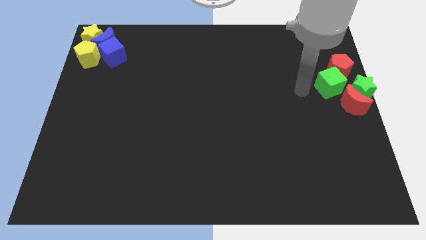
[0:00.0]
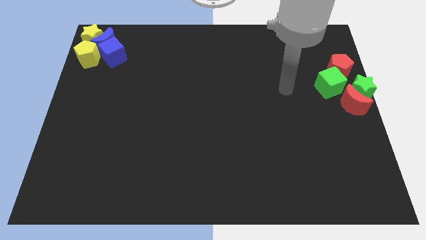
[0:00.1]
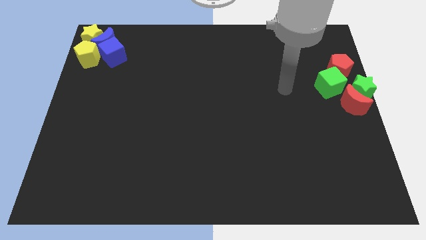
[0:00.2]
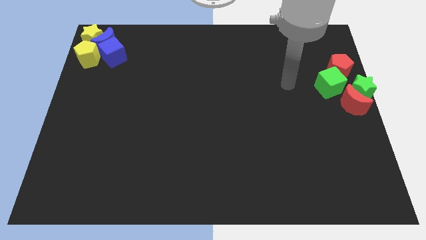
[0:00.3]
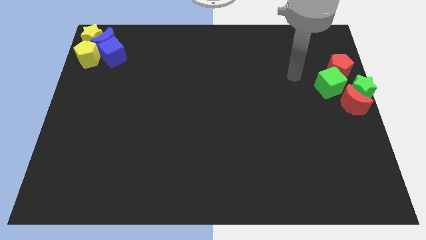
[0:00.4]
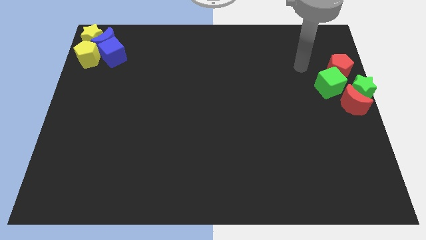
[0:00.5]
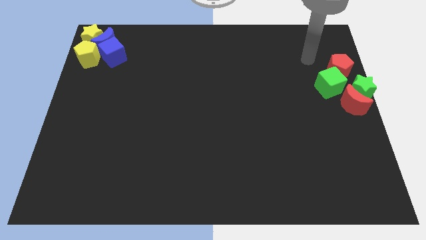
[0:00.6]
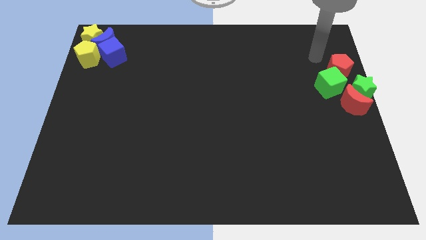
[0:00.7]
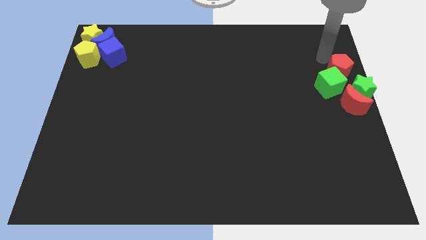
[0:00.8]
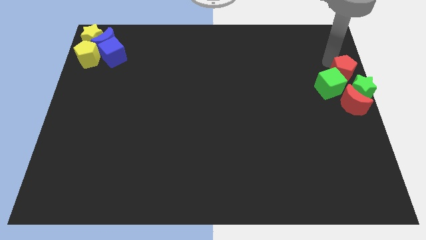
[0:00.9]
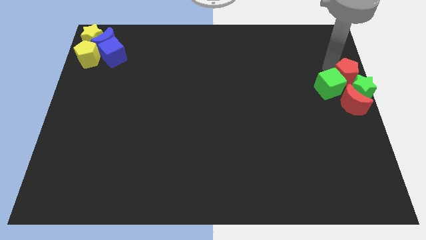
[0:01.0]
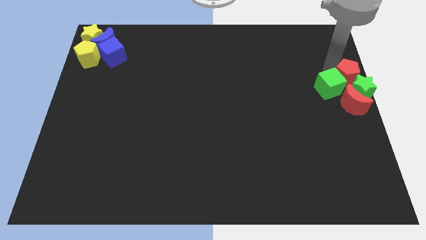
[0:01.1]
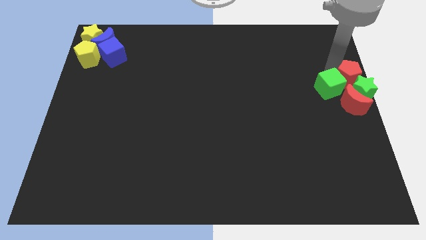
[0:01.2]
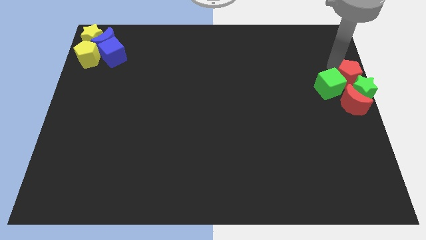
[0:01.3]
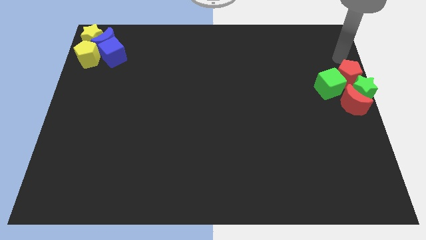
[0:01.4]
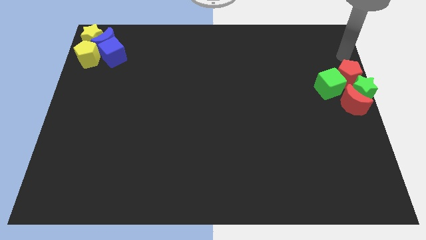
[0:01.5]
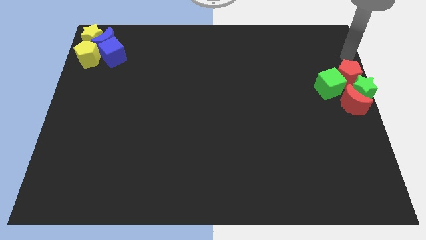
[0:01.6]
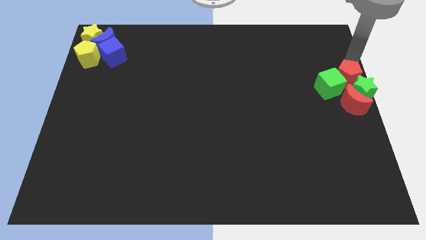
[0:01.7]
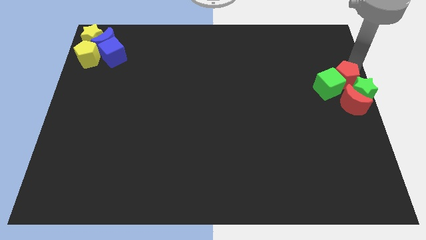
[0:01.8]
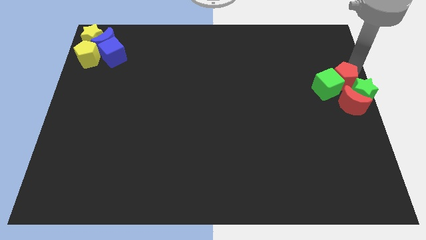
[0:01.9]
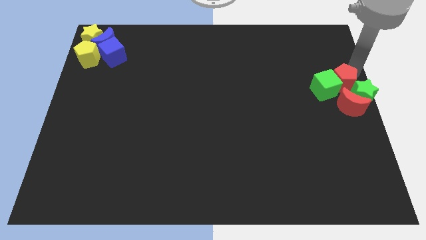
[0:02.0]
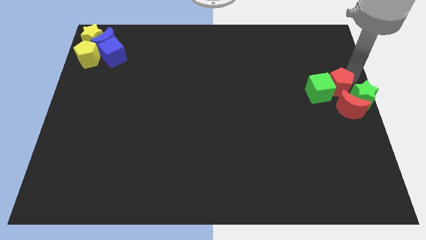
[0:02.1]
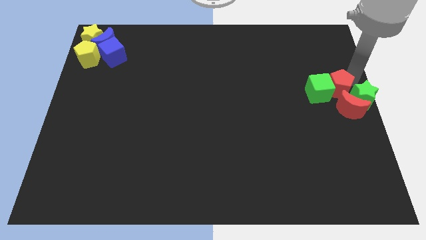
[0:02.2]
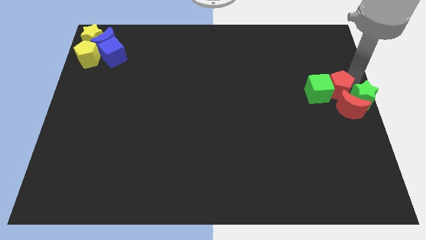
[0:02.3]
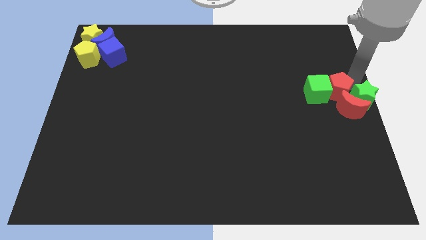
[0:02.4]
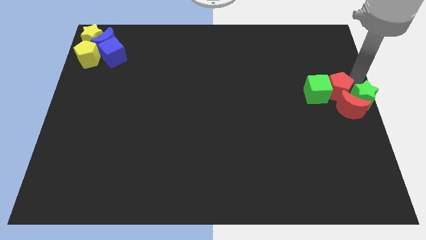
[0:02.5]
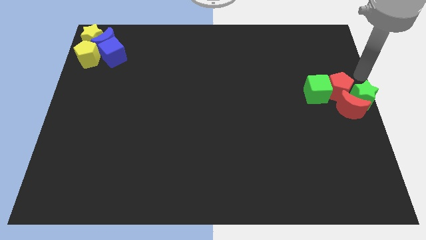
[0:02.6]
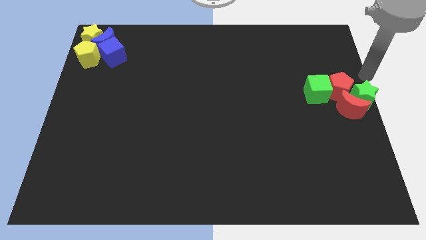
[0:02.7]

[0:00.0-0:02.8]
slide the red pentagon into green cube

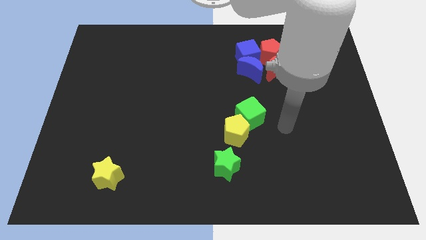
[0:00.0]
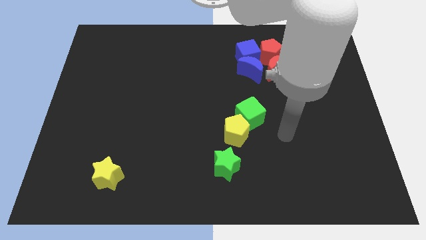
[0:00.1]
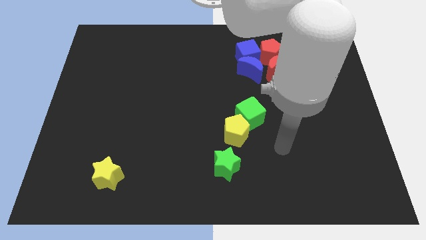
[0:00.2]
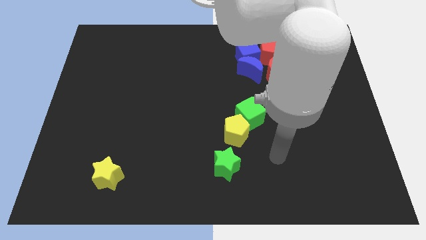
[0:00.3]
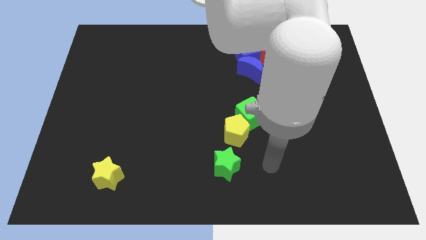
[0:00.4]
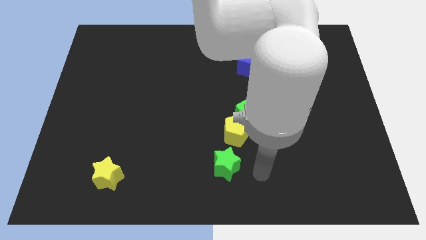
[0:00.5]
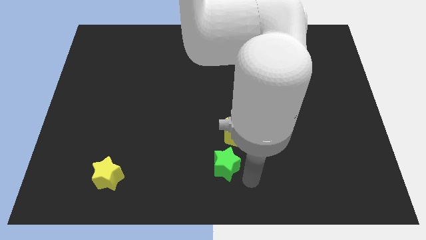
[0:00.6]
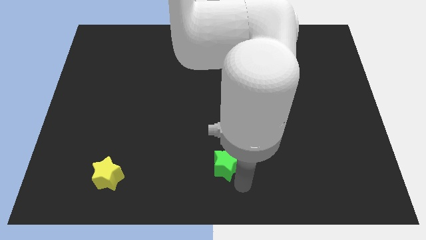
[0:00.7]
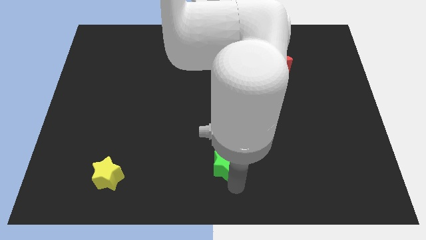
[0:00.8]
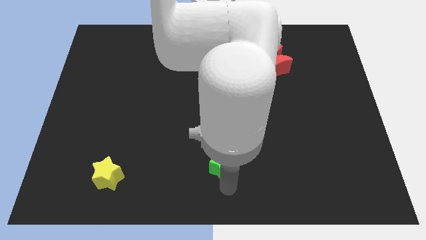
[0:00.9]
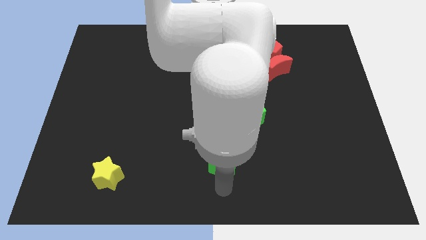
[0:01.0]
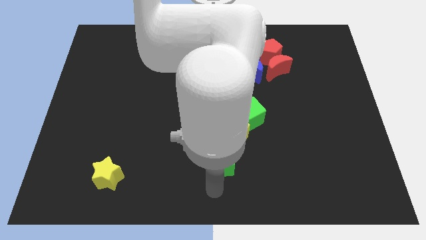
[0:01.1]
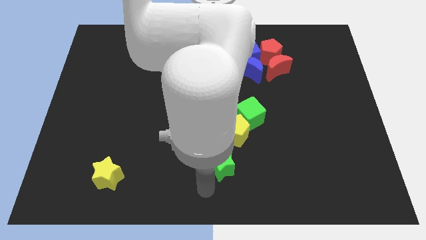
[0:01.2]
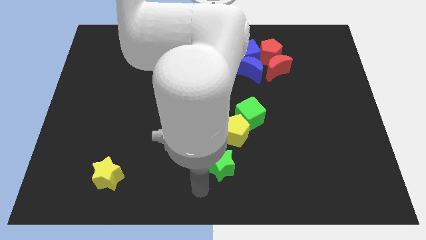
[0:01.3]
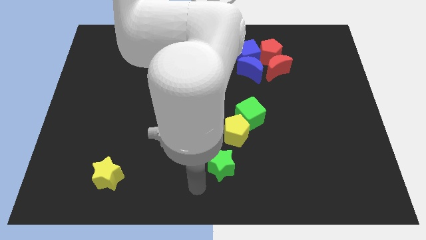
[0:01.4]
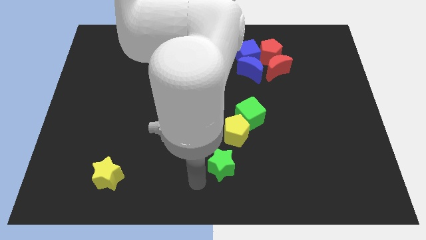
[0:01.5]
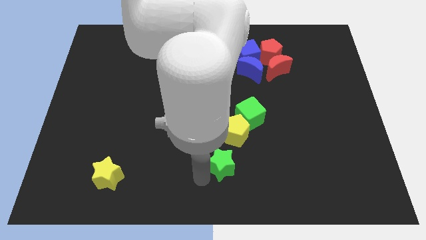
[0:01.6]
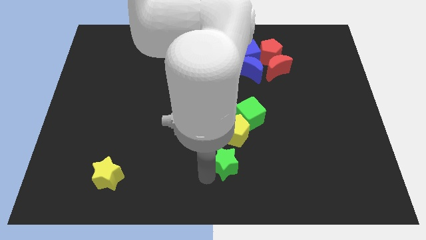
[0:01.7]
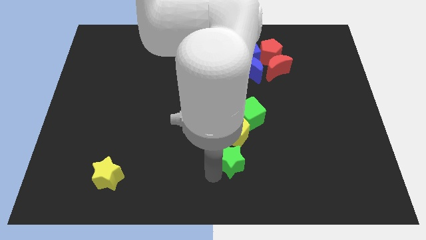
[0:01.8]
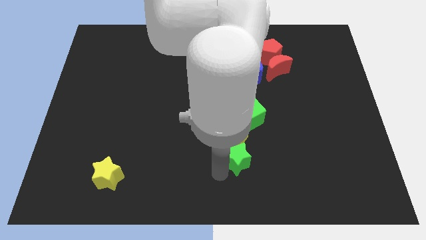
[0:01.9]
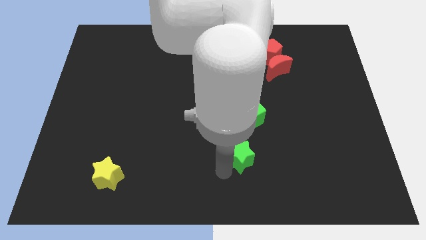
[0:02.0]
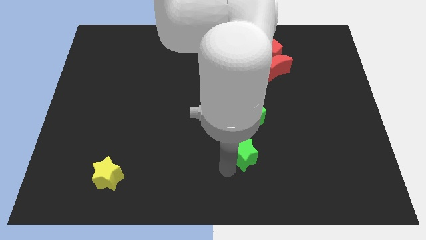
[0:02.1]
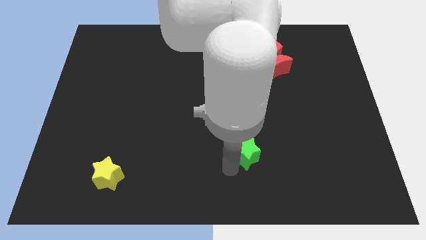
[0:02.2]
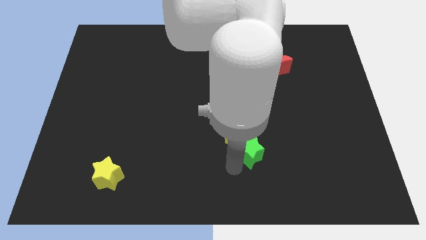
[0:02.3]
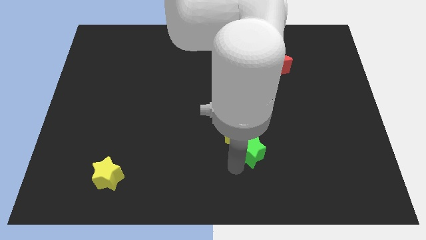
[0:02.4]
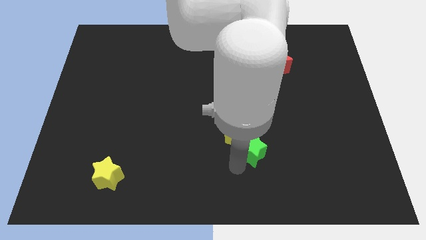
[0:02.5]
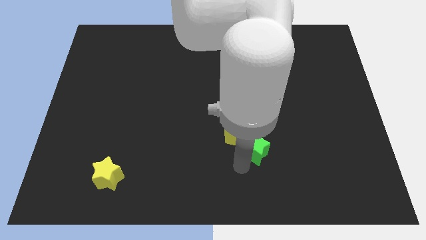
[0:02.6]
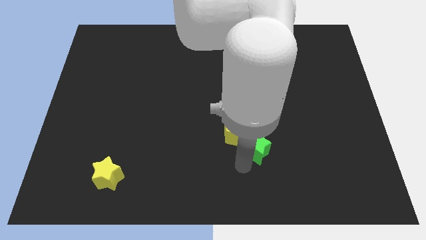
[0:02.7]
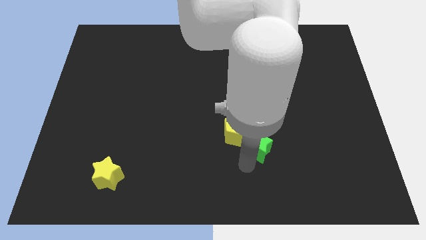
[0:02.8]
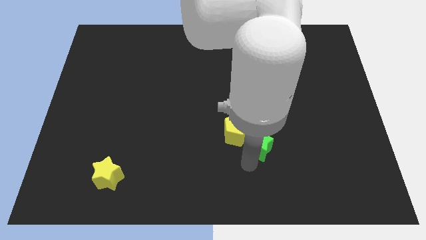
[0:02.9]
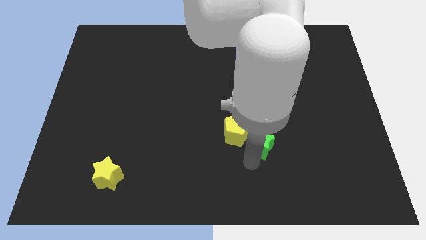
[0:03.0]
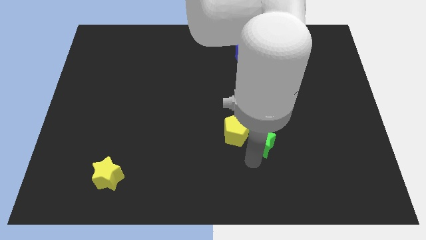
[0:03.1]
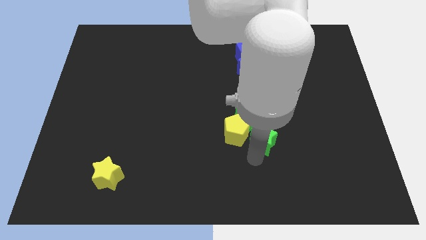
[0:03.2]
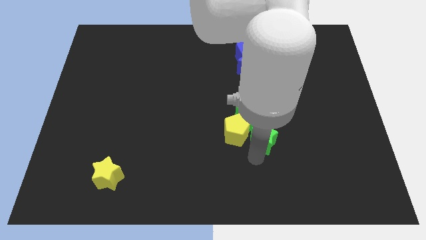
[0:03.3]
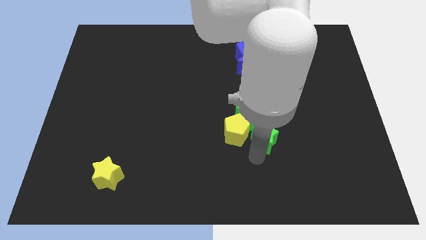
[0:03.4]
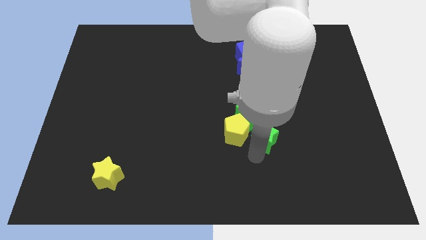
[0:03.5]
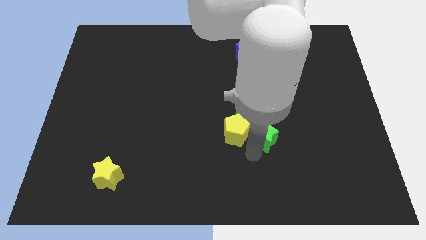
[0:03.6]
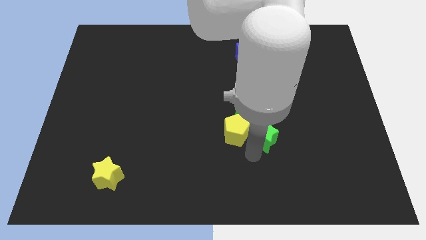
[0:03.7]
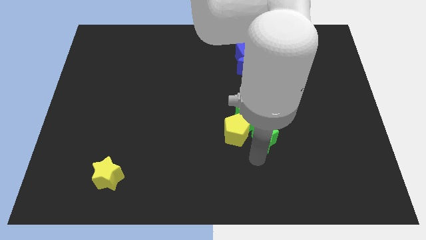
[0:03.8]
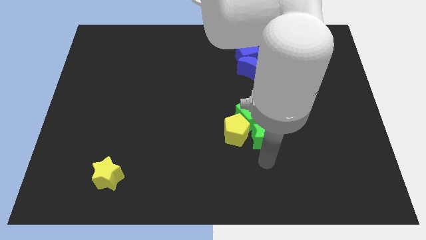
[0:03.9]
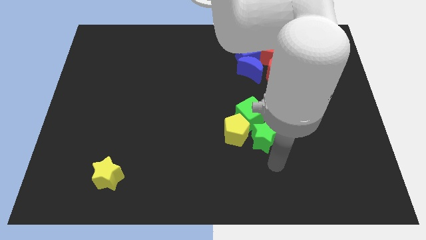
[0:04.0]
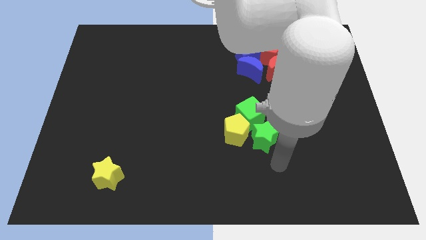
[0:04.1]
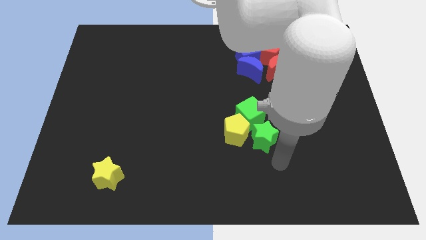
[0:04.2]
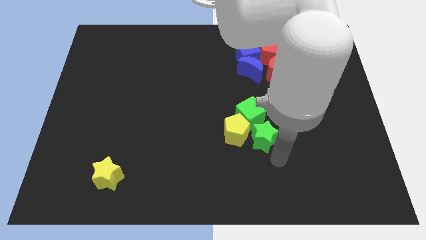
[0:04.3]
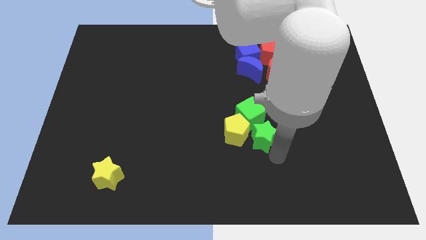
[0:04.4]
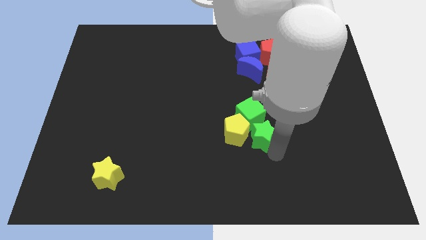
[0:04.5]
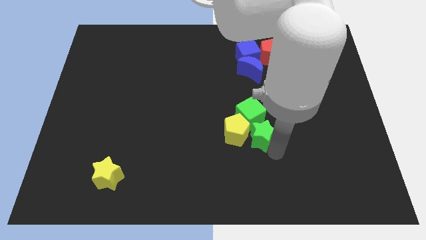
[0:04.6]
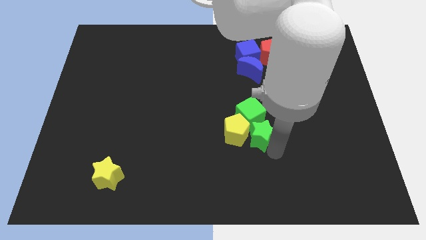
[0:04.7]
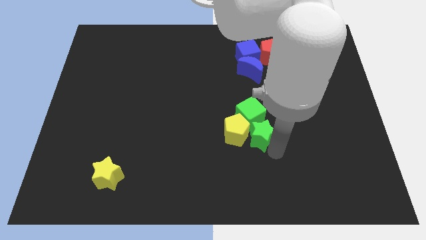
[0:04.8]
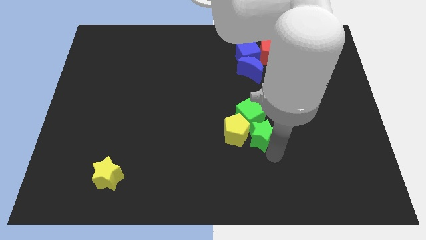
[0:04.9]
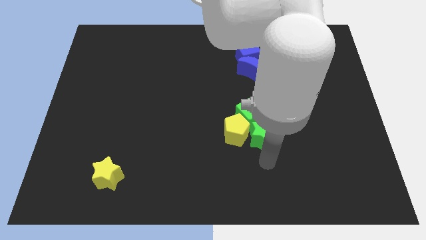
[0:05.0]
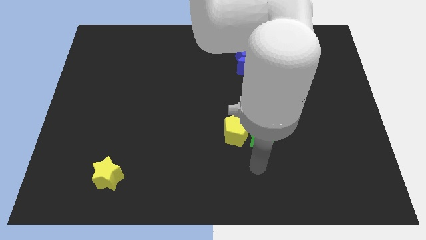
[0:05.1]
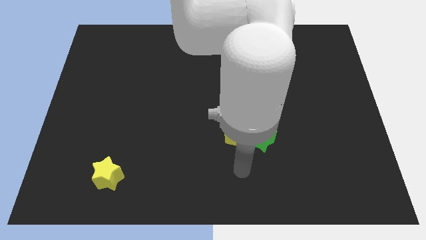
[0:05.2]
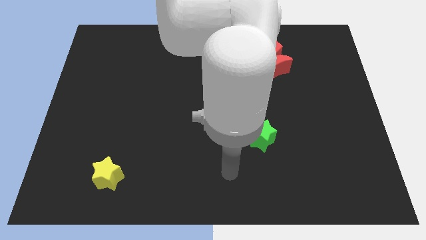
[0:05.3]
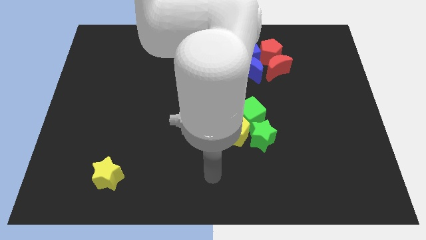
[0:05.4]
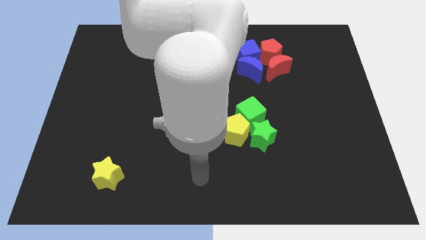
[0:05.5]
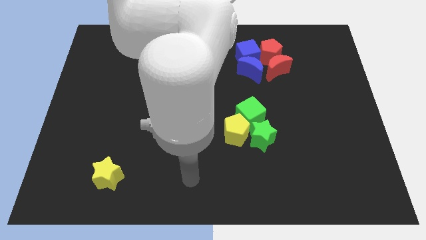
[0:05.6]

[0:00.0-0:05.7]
push the green star to the right side of the yellow pentagon

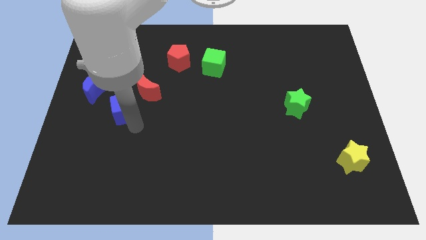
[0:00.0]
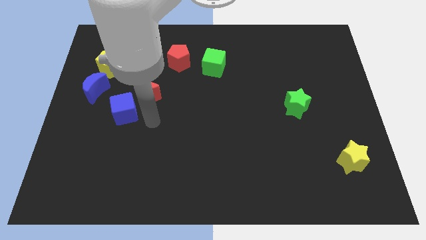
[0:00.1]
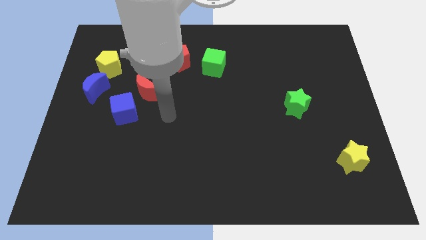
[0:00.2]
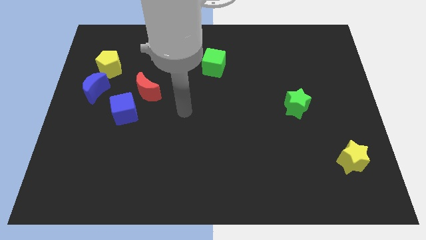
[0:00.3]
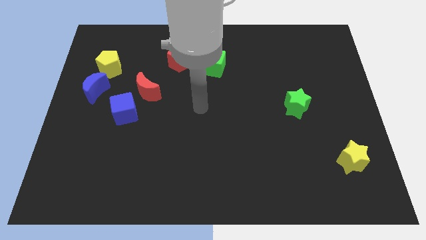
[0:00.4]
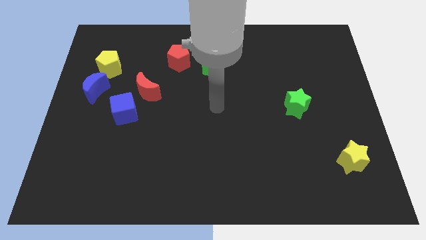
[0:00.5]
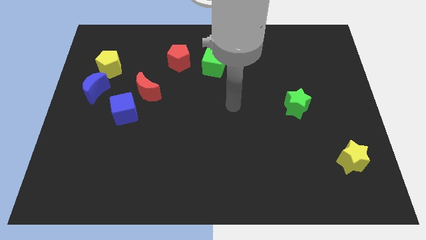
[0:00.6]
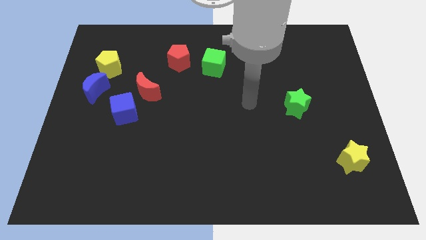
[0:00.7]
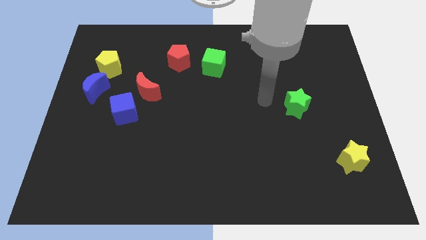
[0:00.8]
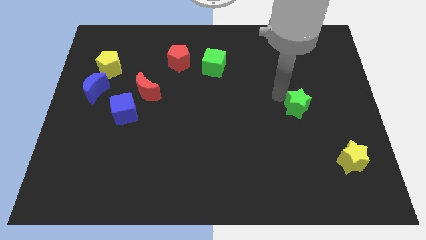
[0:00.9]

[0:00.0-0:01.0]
move your arm to the left of green star
